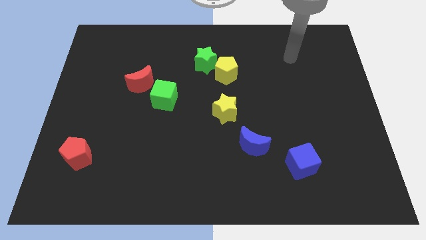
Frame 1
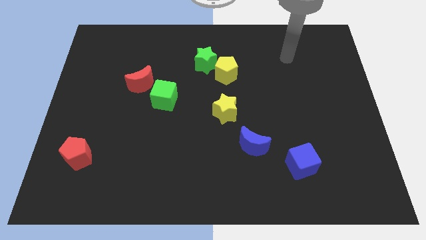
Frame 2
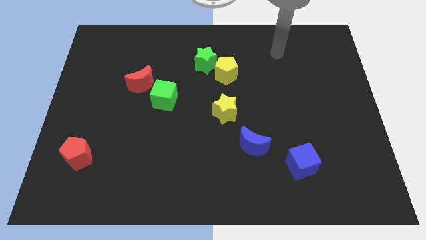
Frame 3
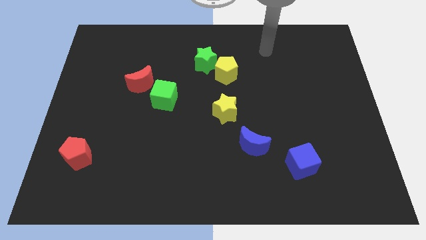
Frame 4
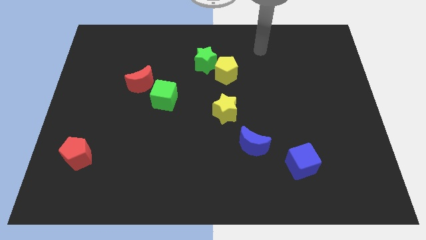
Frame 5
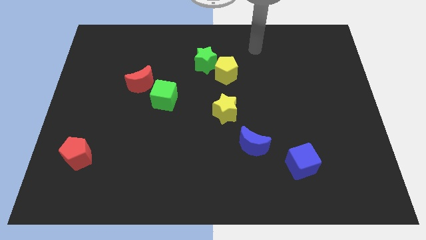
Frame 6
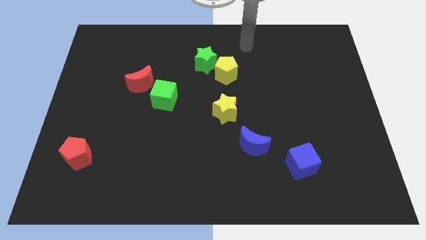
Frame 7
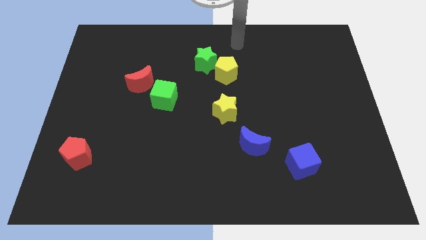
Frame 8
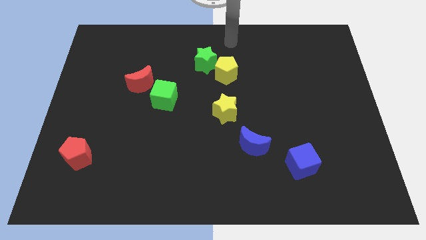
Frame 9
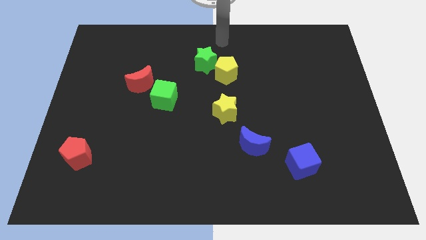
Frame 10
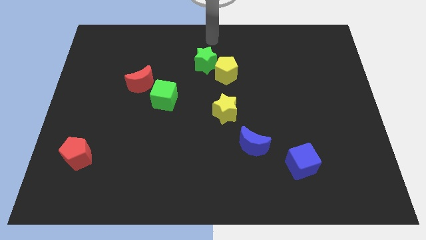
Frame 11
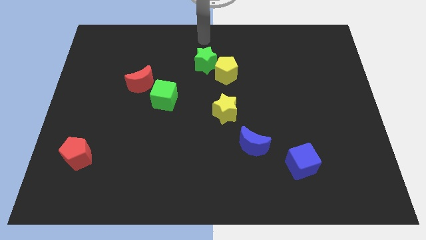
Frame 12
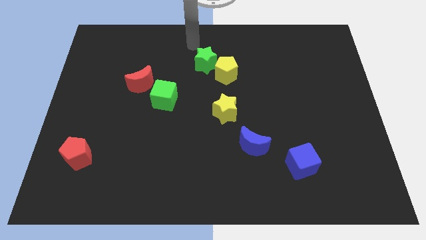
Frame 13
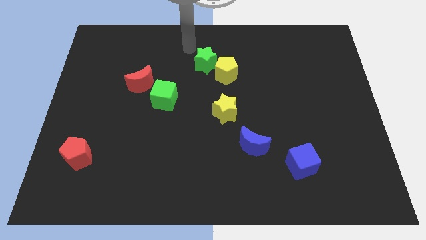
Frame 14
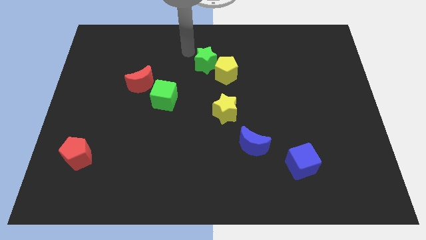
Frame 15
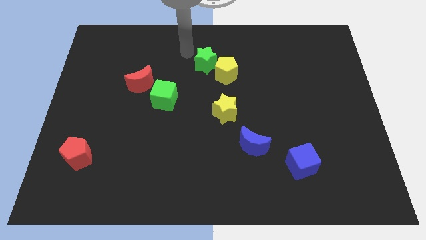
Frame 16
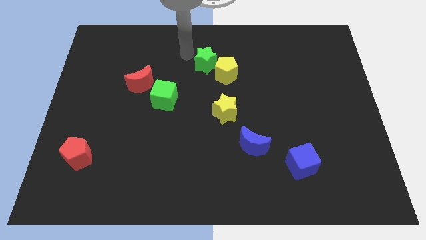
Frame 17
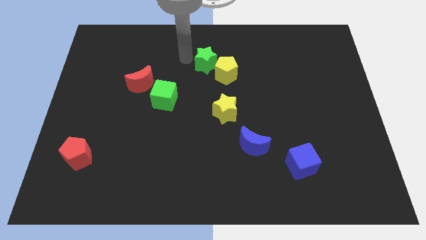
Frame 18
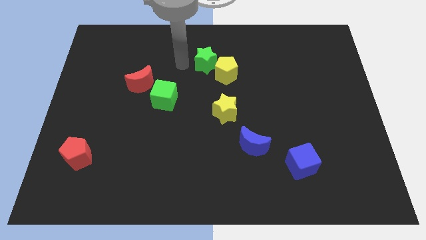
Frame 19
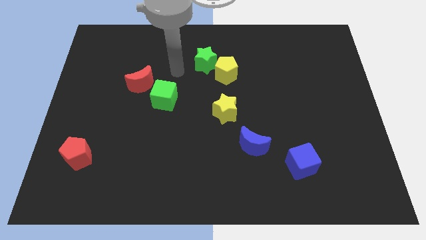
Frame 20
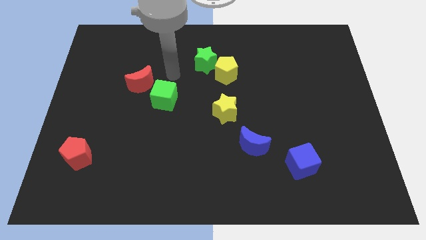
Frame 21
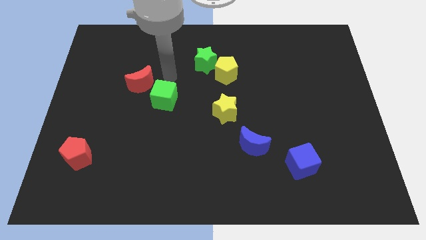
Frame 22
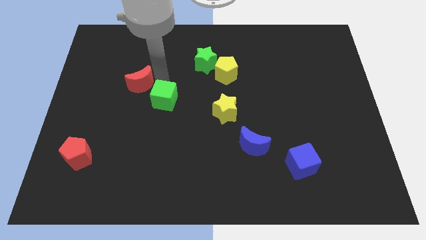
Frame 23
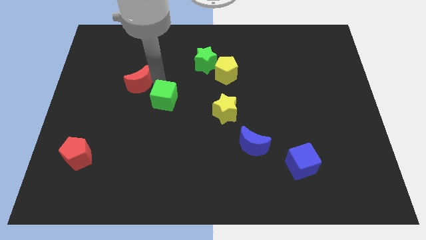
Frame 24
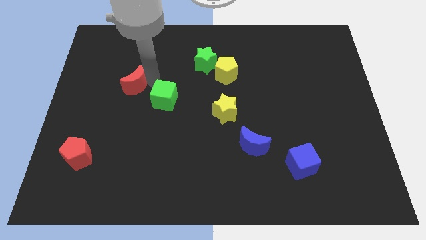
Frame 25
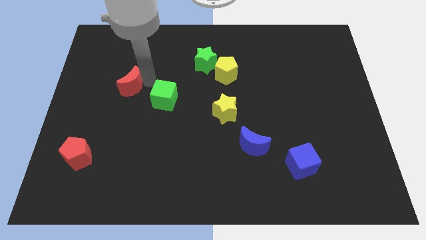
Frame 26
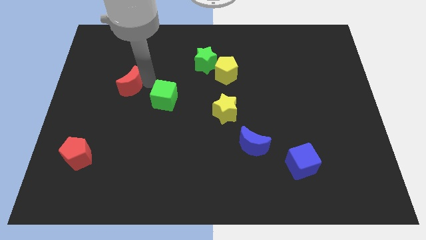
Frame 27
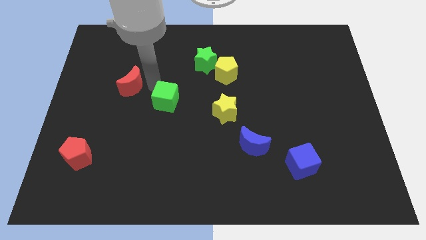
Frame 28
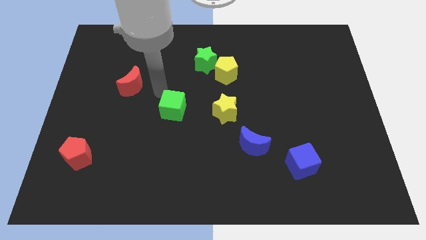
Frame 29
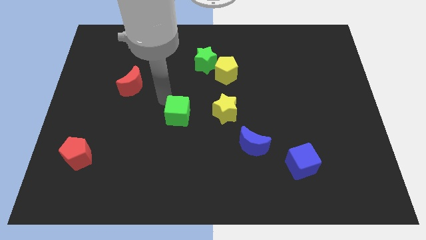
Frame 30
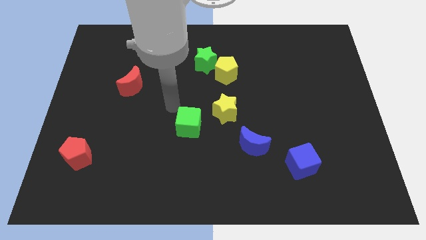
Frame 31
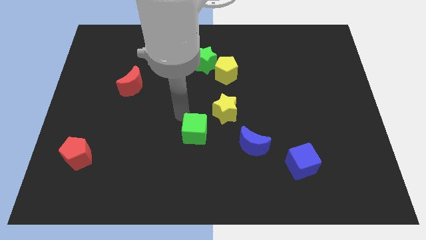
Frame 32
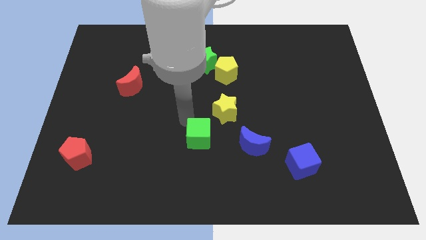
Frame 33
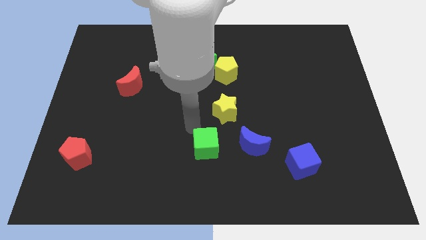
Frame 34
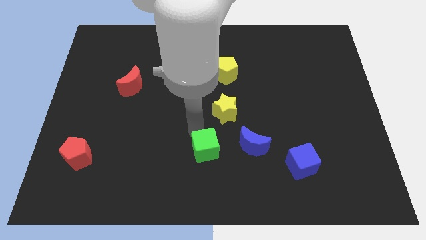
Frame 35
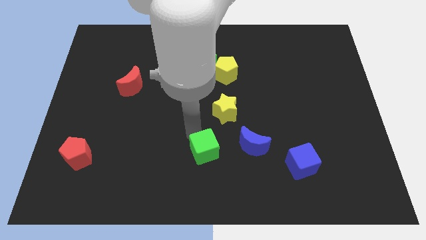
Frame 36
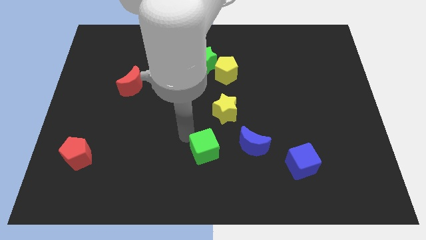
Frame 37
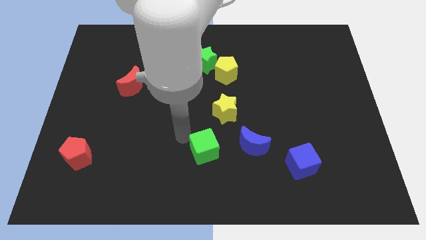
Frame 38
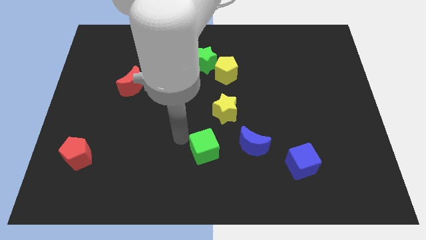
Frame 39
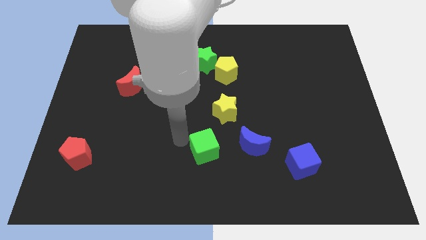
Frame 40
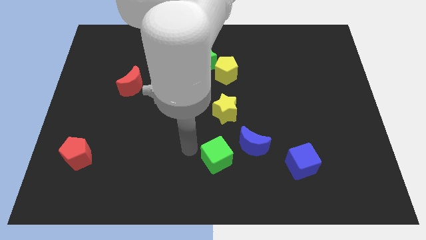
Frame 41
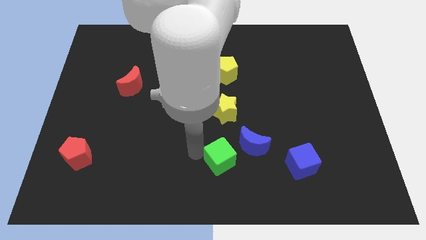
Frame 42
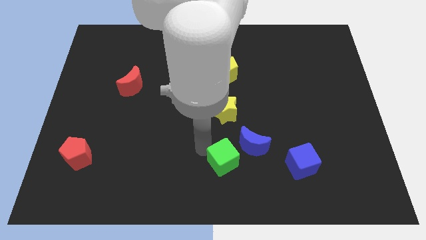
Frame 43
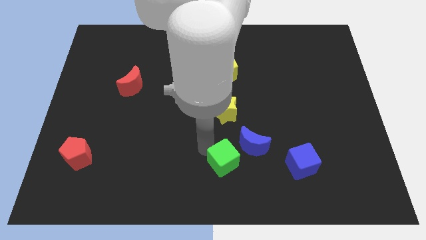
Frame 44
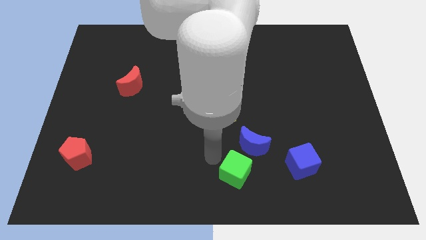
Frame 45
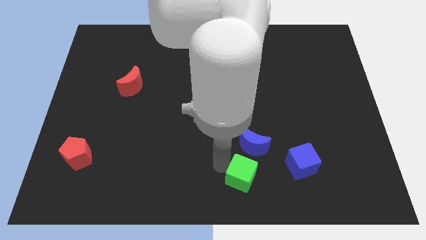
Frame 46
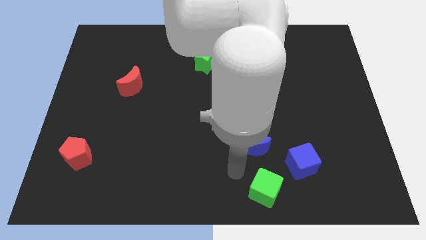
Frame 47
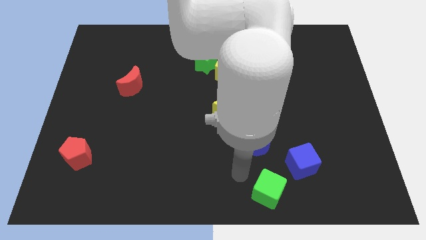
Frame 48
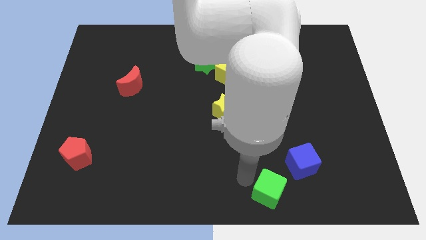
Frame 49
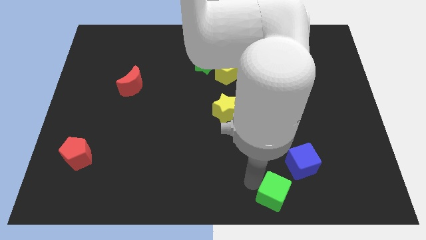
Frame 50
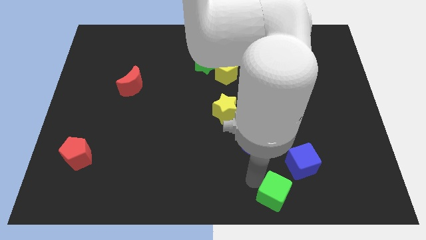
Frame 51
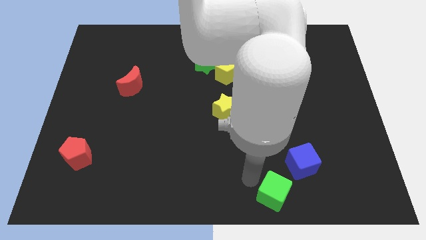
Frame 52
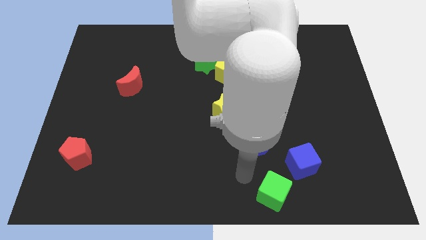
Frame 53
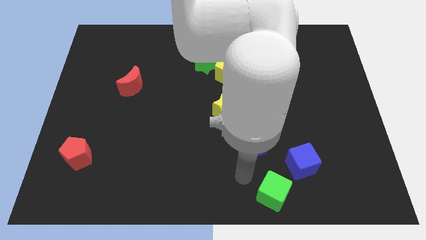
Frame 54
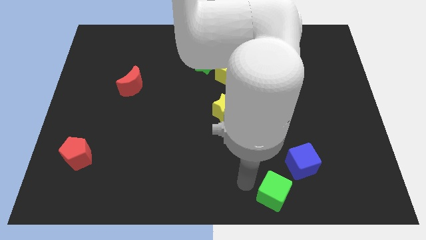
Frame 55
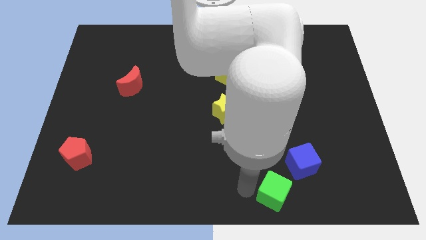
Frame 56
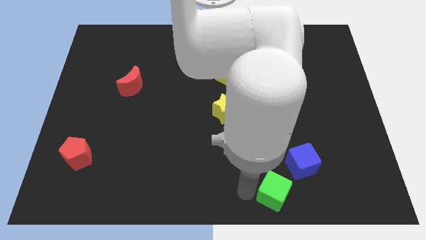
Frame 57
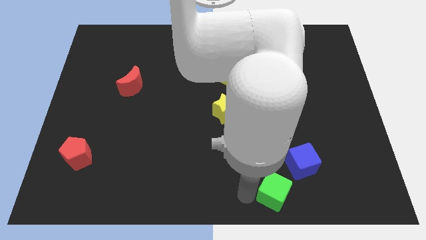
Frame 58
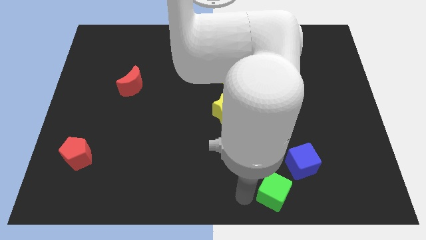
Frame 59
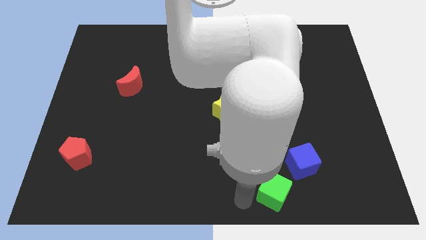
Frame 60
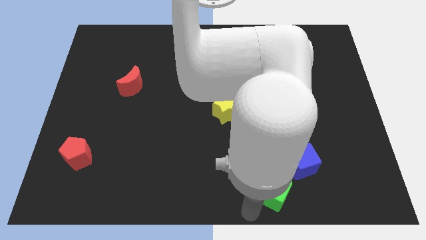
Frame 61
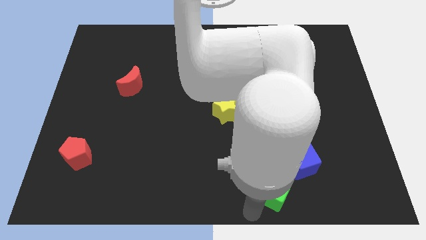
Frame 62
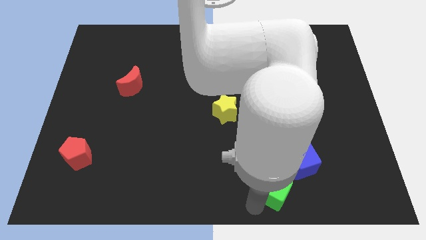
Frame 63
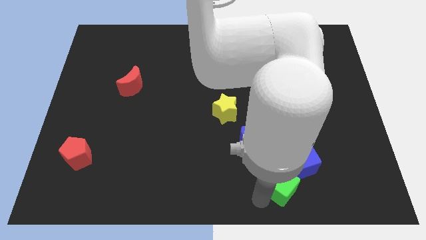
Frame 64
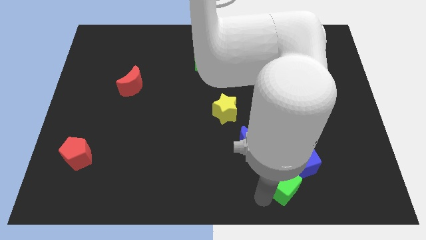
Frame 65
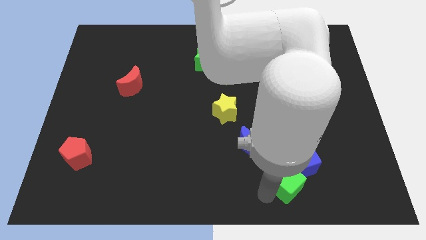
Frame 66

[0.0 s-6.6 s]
push the green cube next to the blue cube

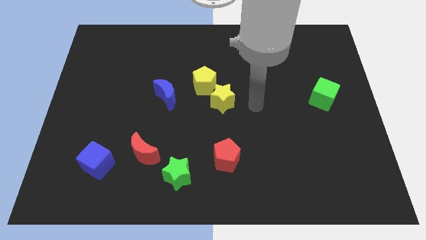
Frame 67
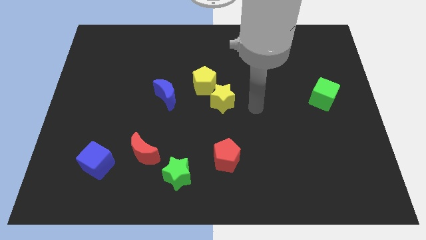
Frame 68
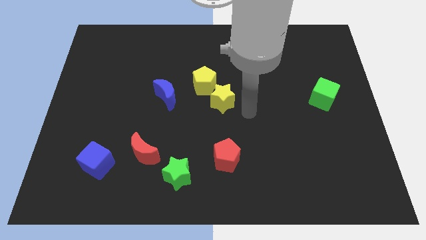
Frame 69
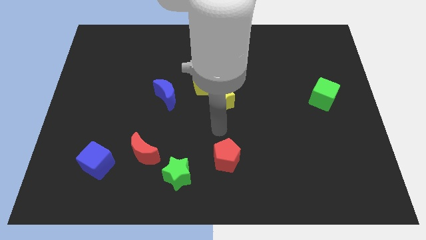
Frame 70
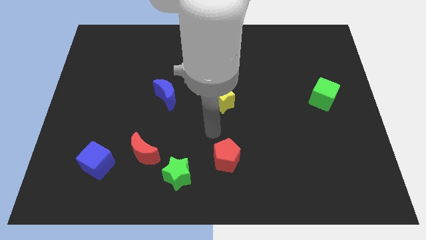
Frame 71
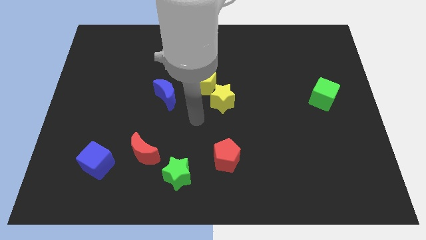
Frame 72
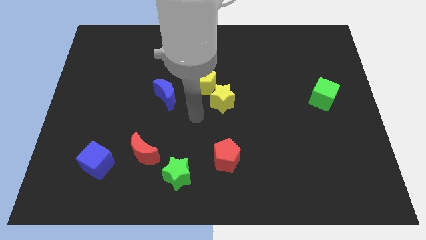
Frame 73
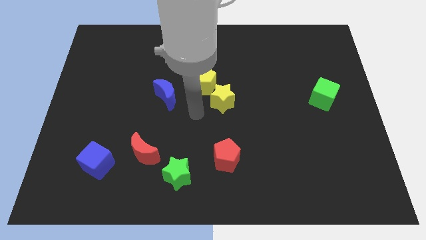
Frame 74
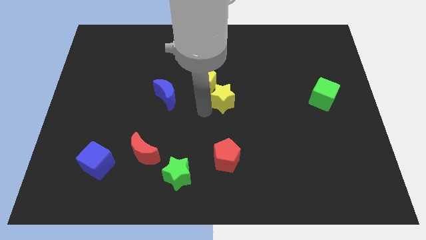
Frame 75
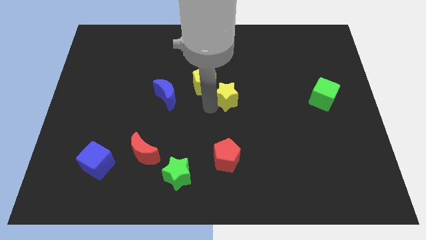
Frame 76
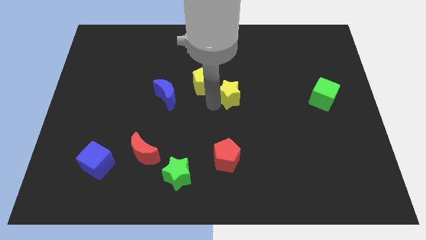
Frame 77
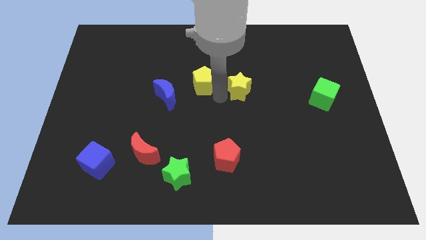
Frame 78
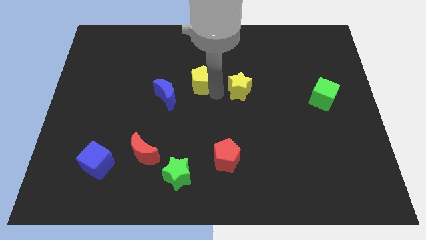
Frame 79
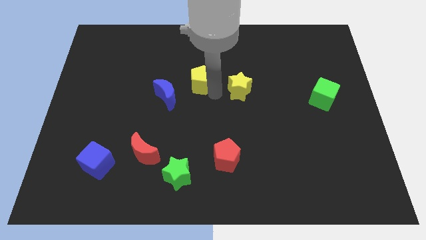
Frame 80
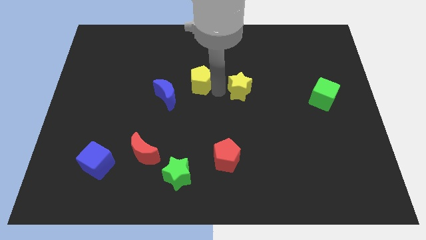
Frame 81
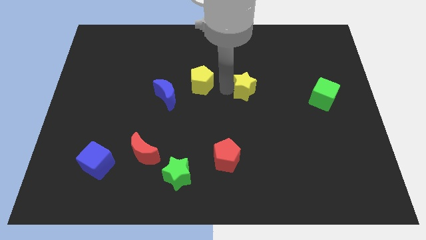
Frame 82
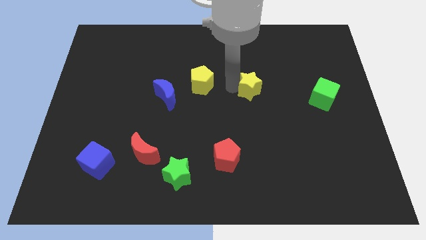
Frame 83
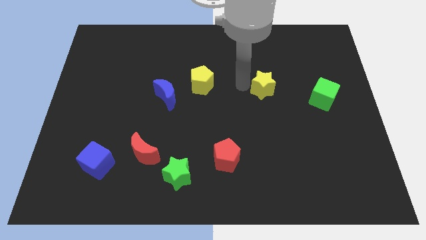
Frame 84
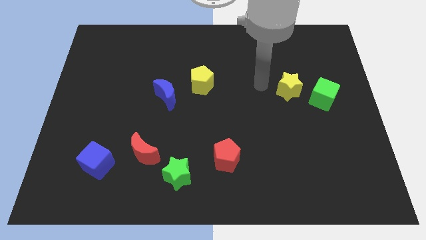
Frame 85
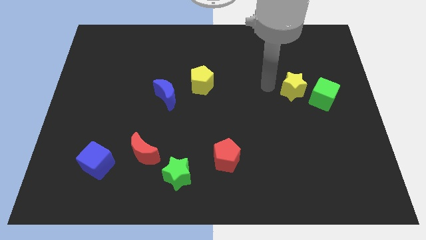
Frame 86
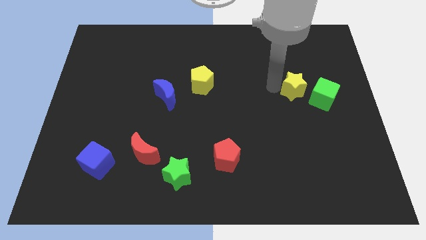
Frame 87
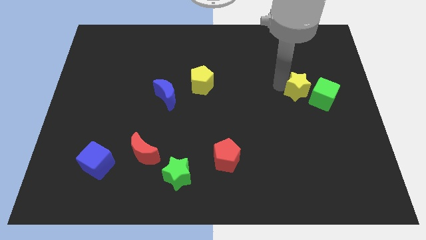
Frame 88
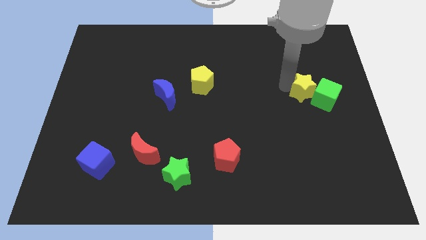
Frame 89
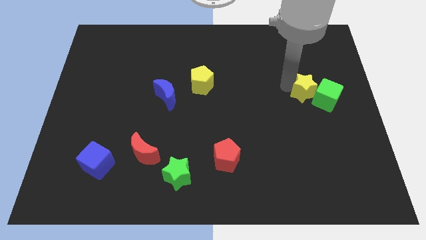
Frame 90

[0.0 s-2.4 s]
slide the yellow star close to the green cube
